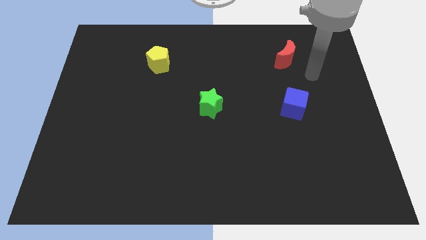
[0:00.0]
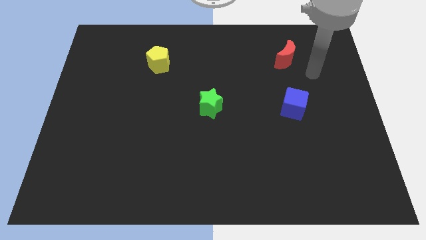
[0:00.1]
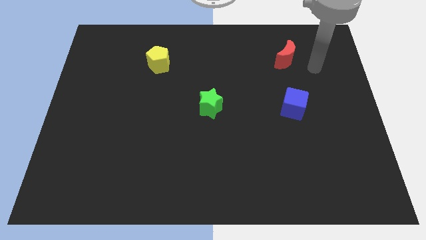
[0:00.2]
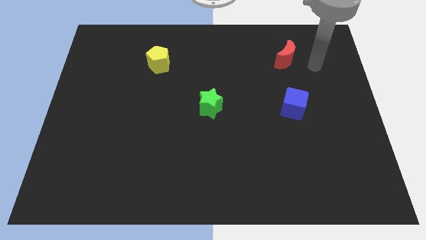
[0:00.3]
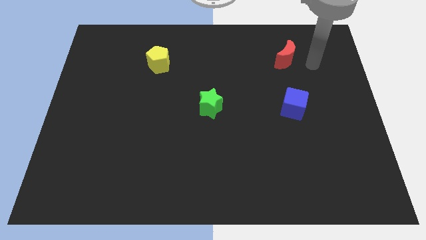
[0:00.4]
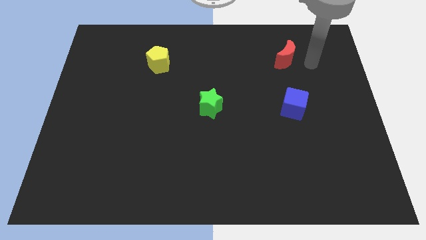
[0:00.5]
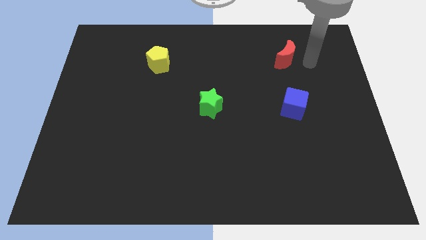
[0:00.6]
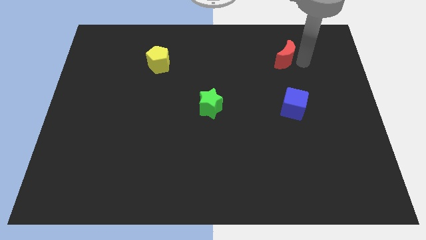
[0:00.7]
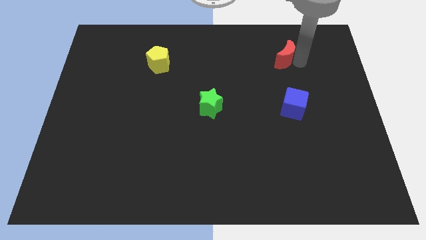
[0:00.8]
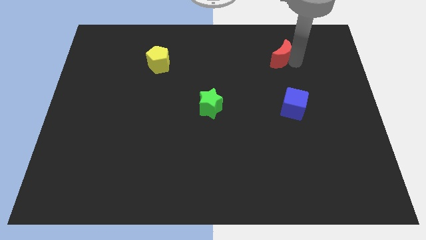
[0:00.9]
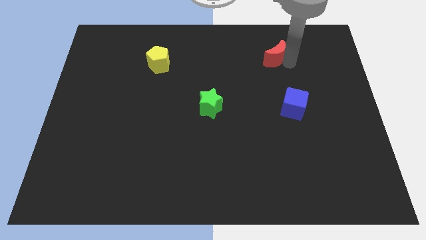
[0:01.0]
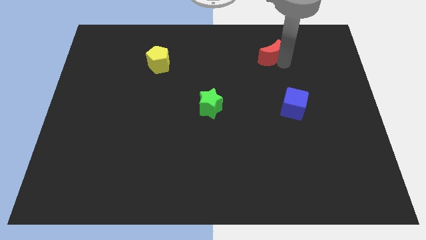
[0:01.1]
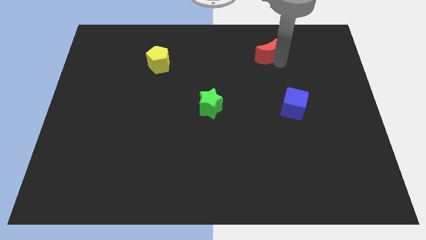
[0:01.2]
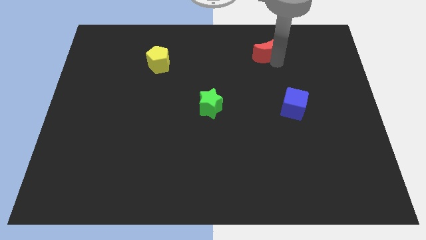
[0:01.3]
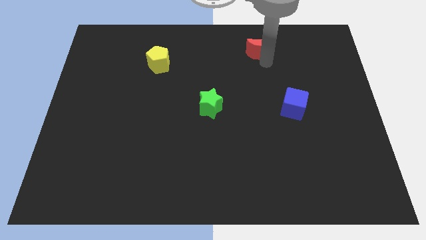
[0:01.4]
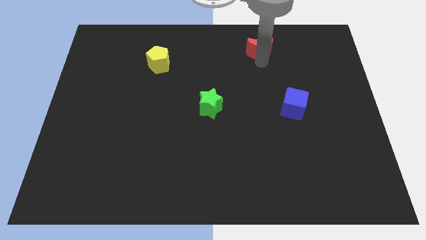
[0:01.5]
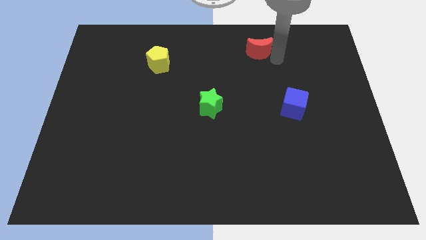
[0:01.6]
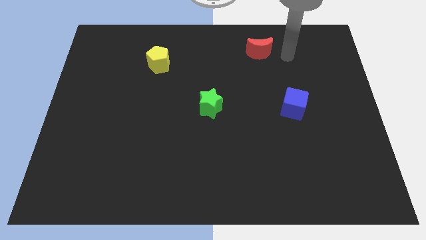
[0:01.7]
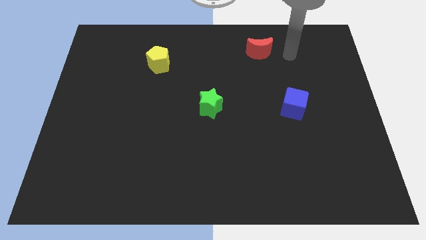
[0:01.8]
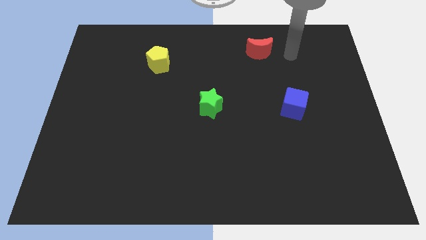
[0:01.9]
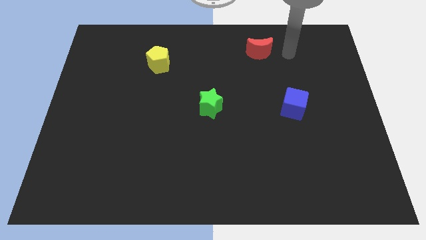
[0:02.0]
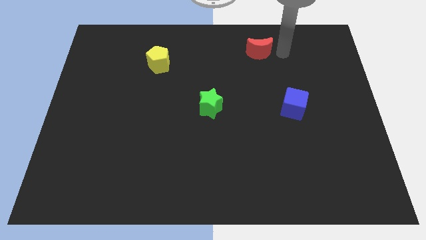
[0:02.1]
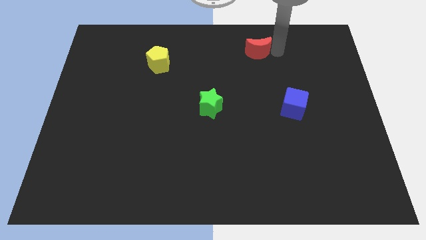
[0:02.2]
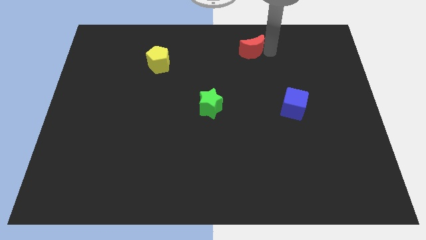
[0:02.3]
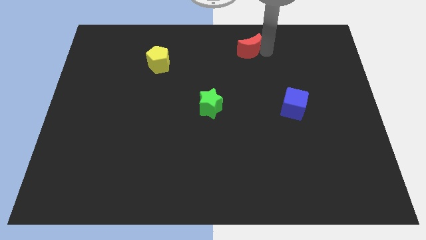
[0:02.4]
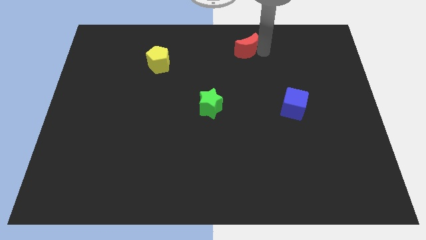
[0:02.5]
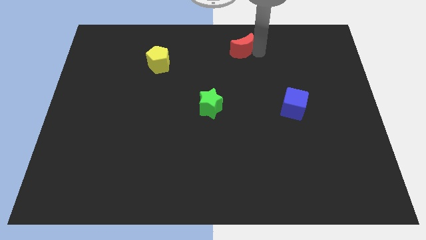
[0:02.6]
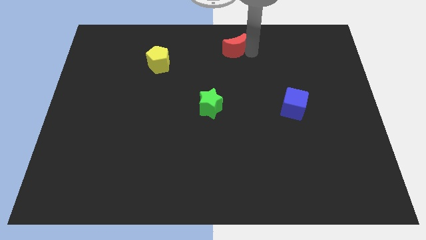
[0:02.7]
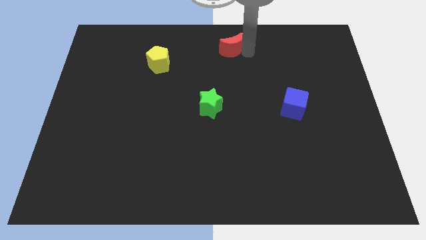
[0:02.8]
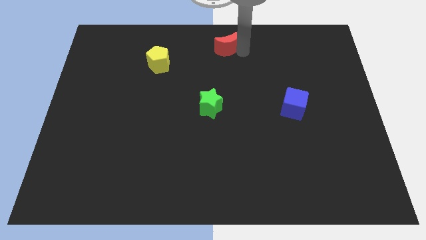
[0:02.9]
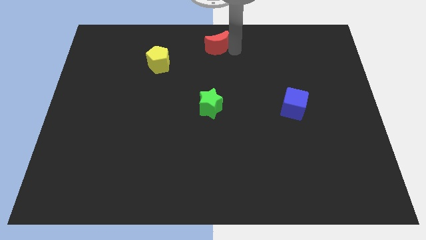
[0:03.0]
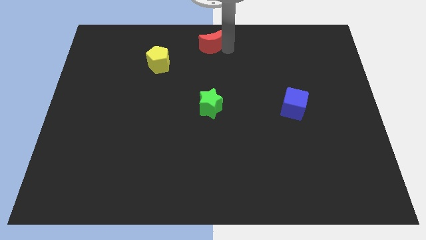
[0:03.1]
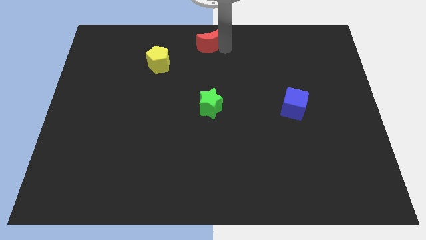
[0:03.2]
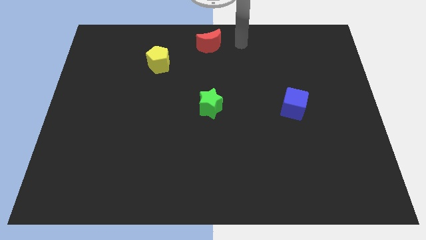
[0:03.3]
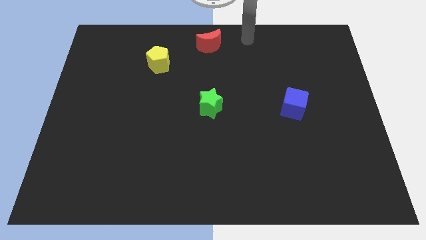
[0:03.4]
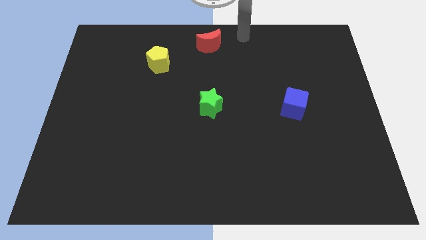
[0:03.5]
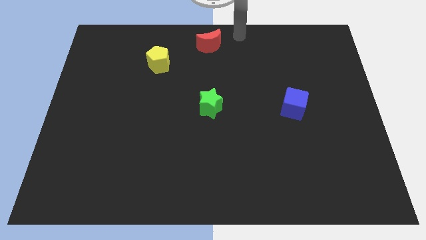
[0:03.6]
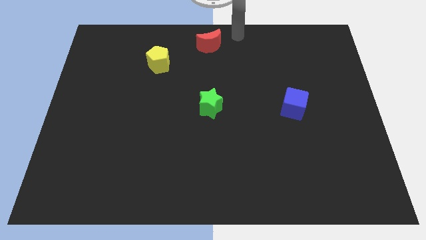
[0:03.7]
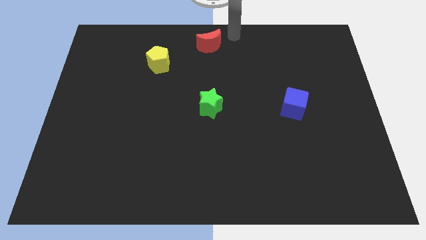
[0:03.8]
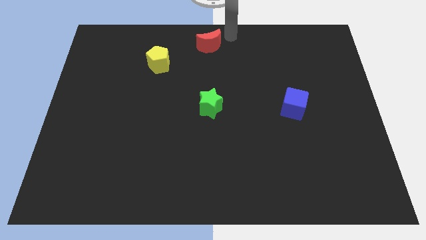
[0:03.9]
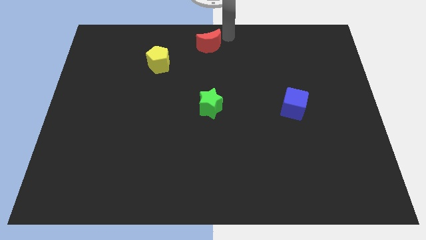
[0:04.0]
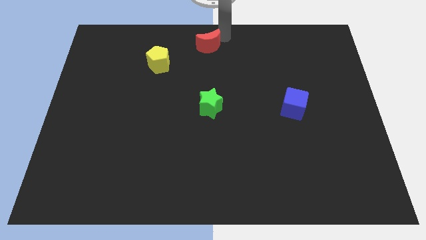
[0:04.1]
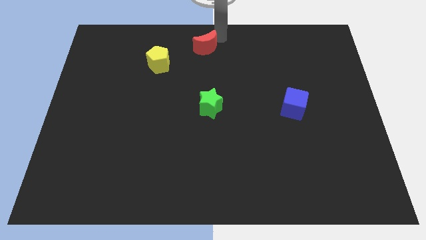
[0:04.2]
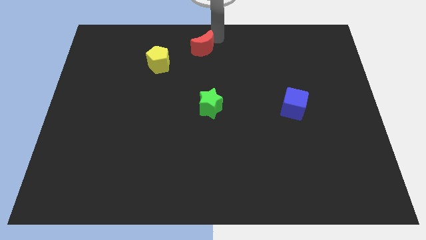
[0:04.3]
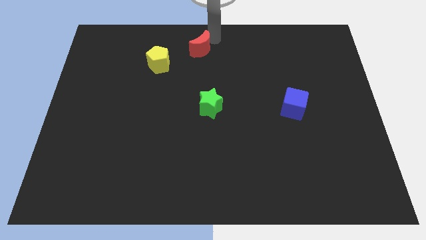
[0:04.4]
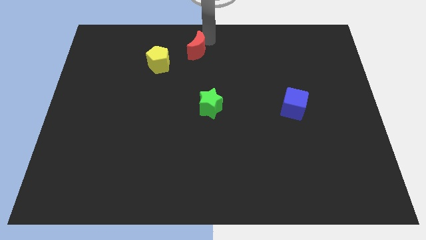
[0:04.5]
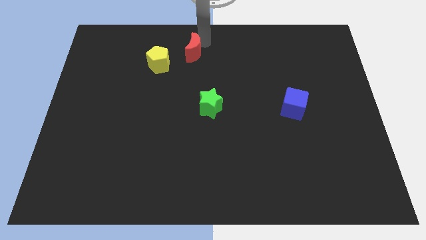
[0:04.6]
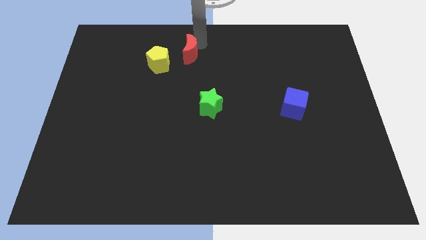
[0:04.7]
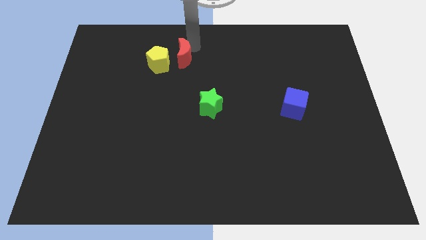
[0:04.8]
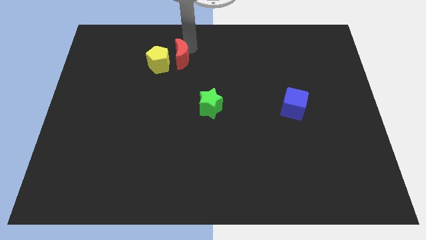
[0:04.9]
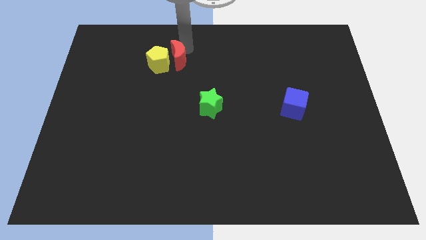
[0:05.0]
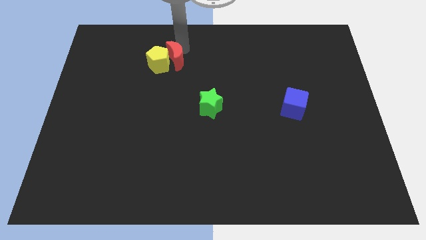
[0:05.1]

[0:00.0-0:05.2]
slide the red block close to the pentagon

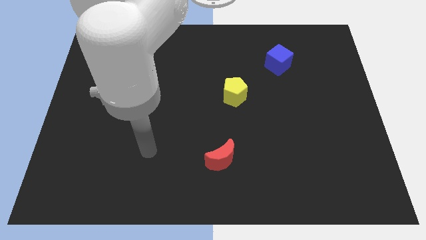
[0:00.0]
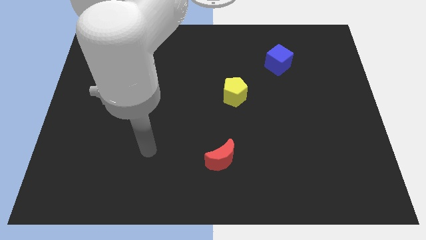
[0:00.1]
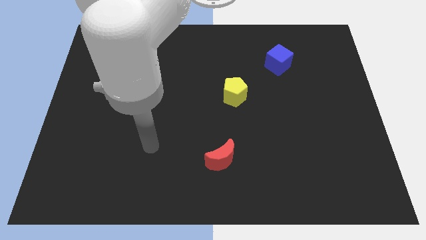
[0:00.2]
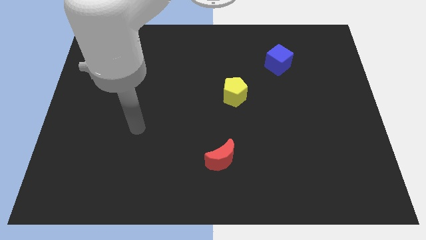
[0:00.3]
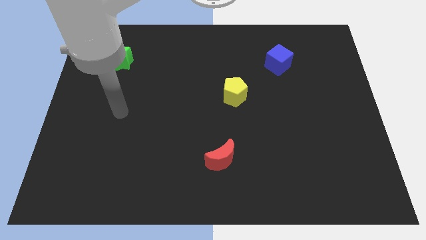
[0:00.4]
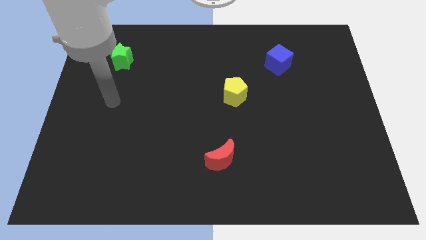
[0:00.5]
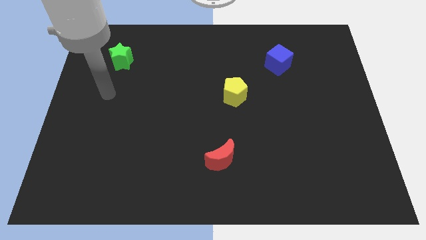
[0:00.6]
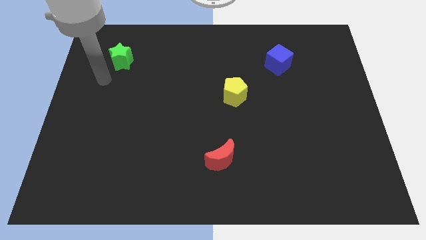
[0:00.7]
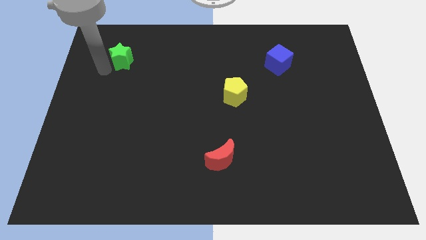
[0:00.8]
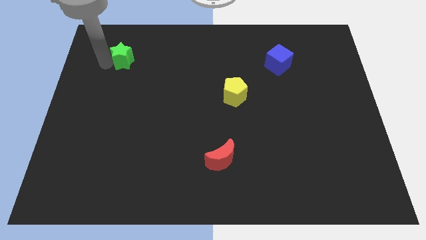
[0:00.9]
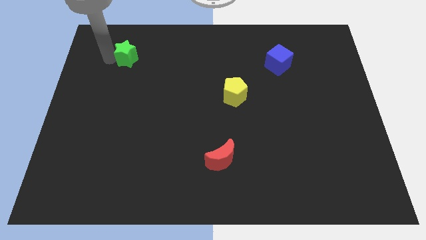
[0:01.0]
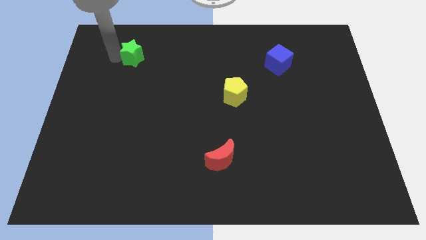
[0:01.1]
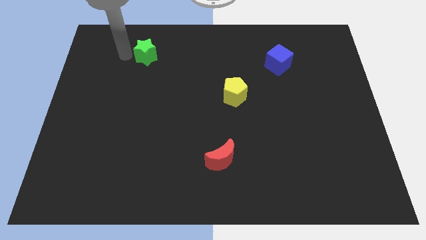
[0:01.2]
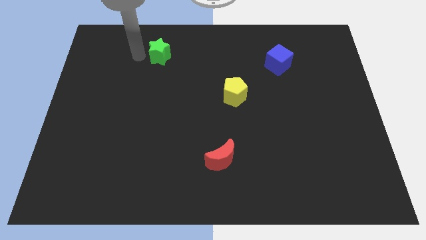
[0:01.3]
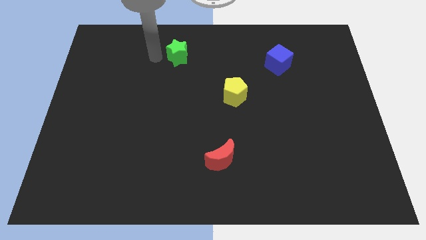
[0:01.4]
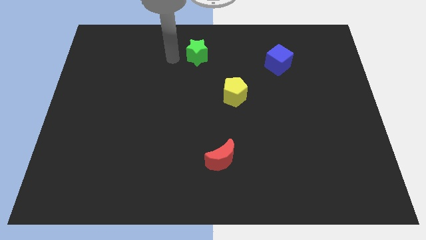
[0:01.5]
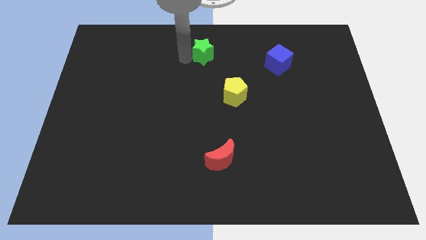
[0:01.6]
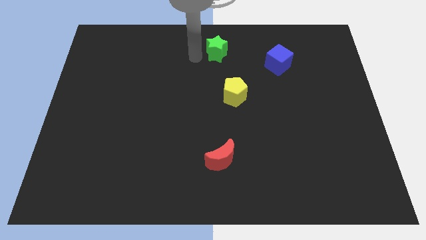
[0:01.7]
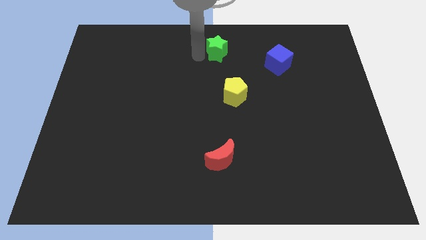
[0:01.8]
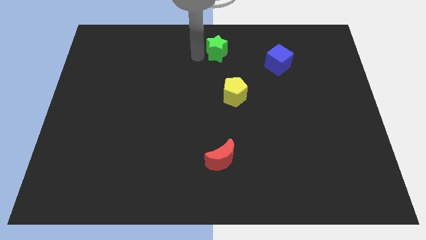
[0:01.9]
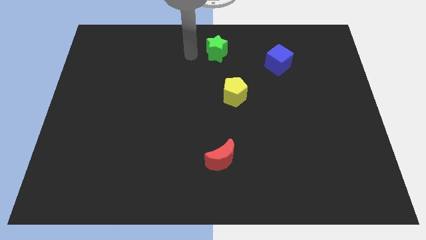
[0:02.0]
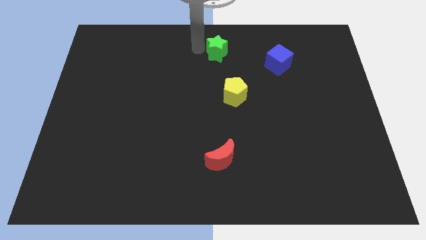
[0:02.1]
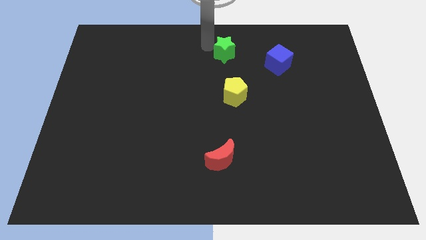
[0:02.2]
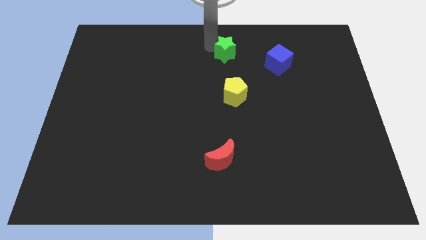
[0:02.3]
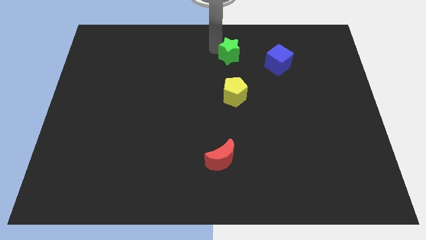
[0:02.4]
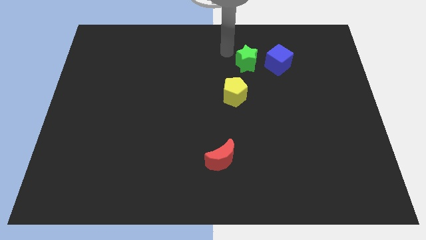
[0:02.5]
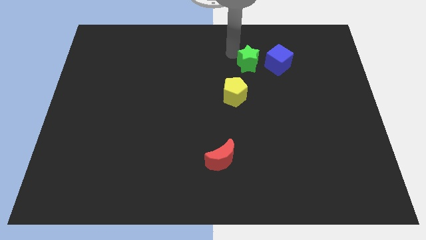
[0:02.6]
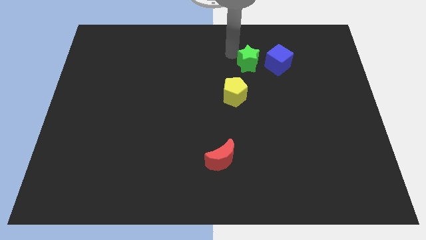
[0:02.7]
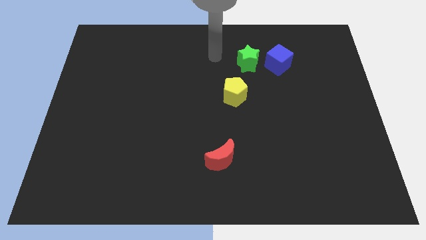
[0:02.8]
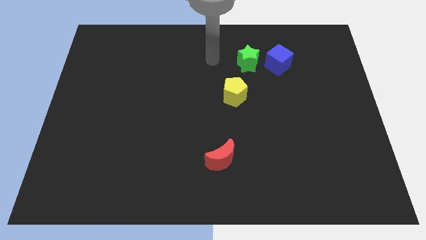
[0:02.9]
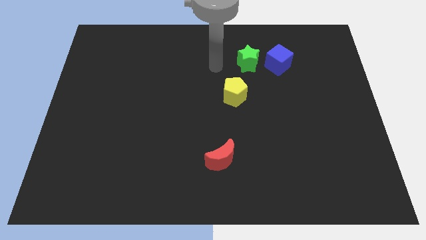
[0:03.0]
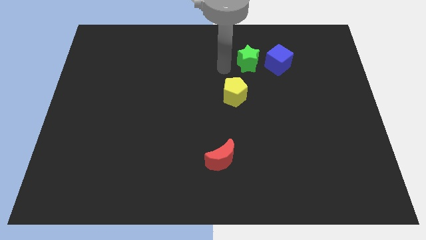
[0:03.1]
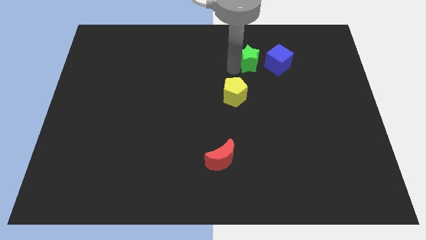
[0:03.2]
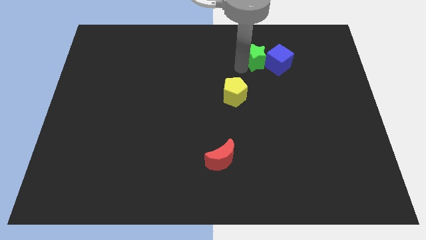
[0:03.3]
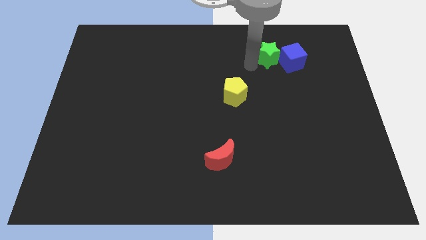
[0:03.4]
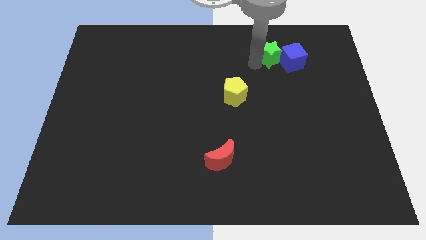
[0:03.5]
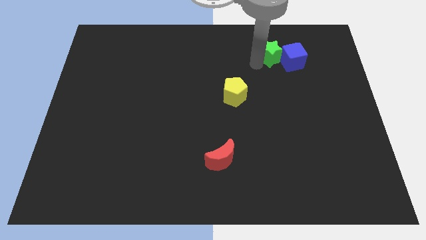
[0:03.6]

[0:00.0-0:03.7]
move the green block towards the blue cube

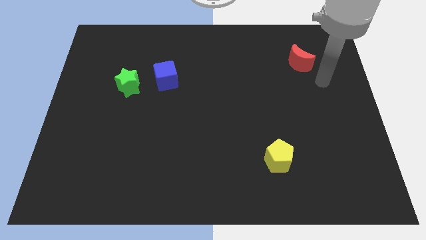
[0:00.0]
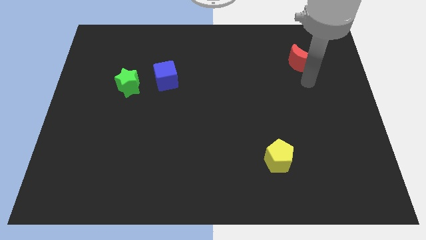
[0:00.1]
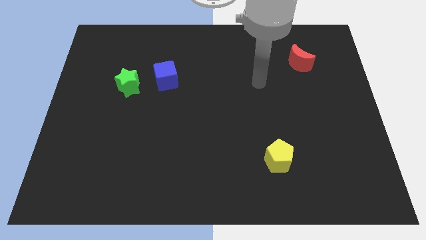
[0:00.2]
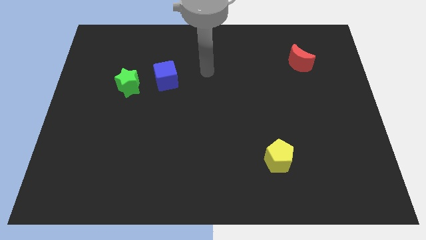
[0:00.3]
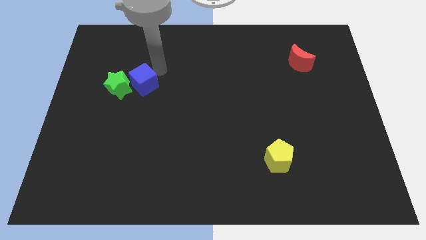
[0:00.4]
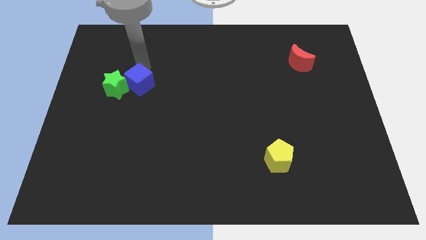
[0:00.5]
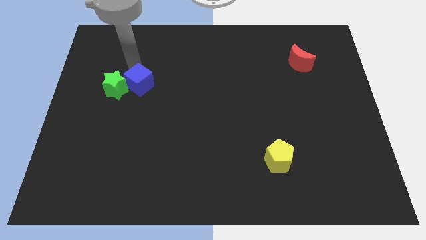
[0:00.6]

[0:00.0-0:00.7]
move the cube close to the green star
